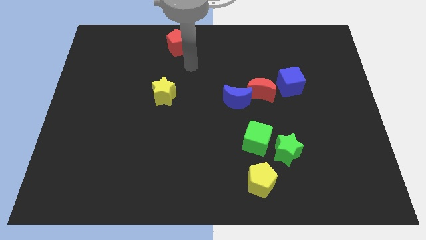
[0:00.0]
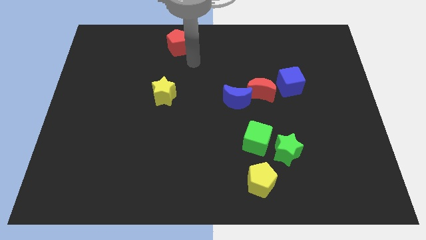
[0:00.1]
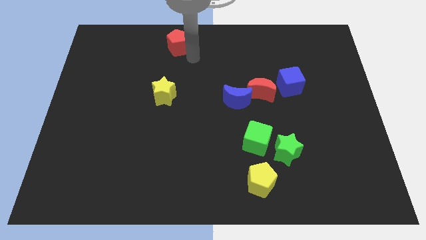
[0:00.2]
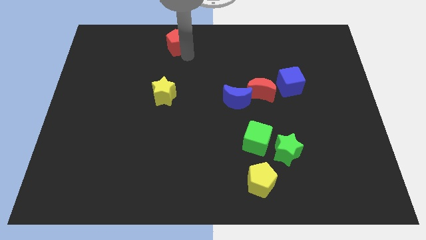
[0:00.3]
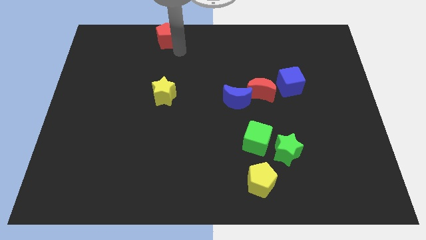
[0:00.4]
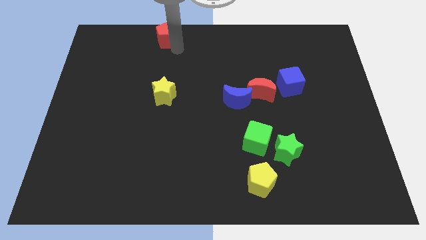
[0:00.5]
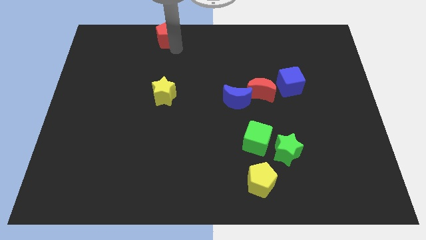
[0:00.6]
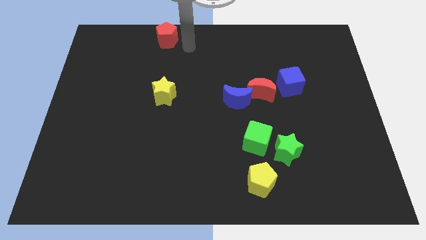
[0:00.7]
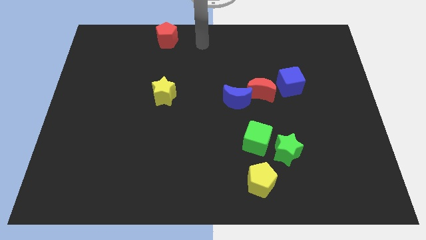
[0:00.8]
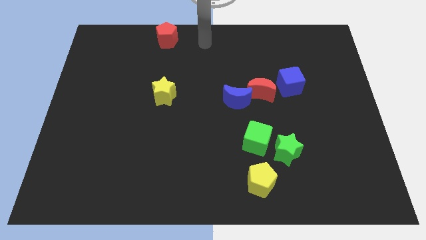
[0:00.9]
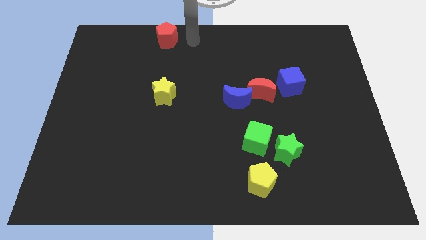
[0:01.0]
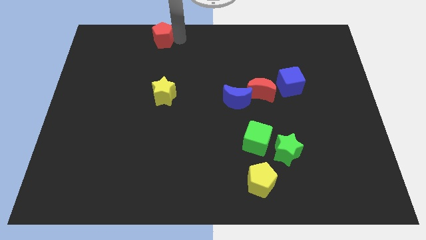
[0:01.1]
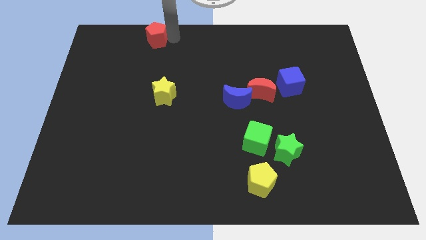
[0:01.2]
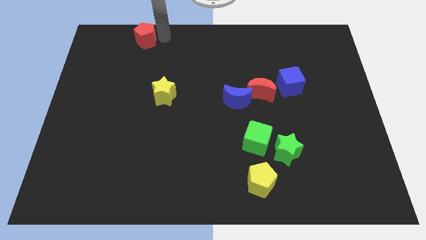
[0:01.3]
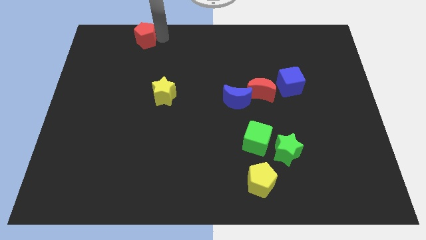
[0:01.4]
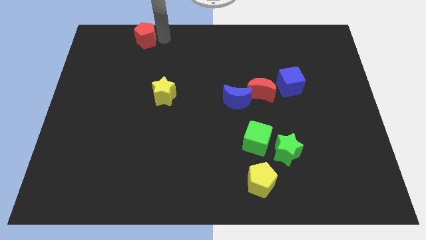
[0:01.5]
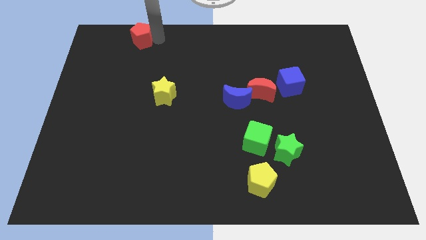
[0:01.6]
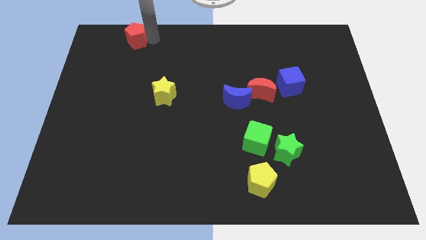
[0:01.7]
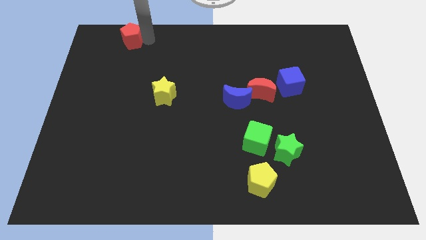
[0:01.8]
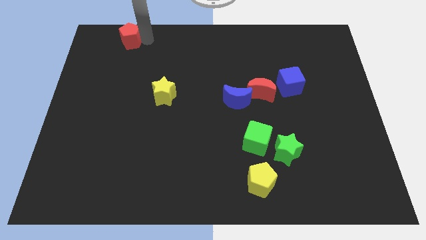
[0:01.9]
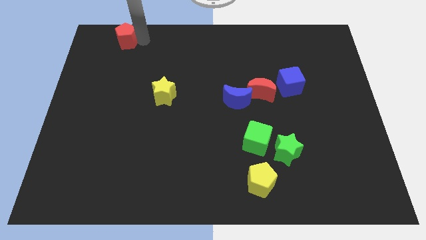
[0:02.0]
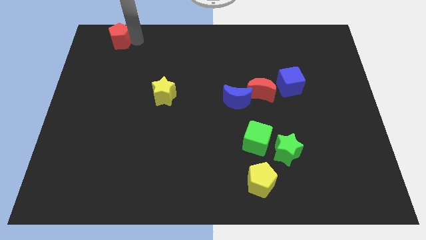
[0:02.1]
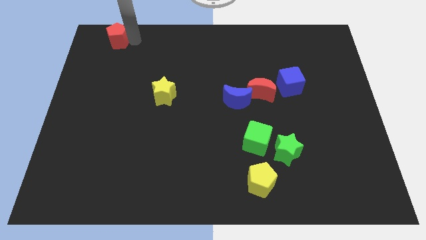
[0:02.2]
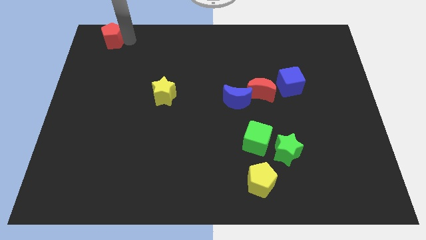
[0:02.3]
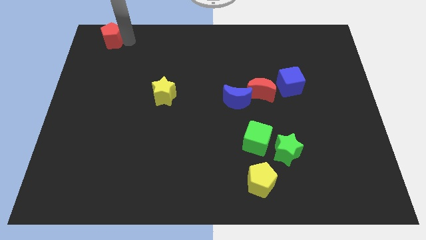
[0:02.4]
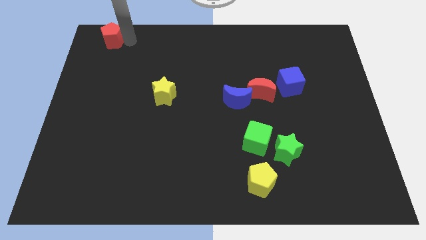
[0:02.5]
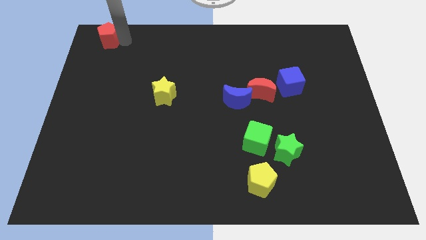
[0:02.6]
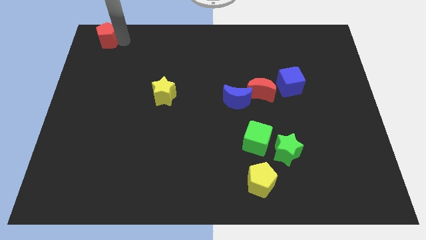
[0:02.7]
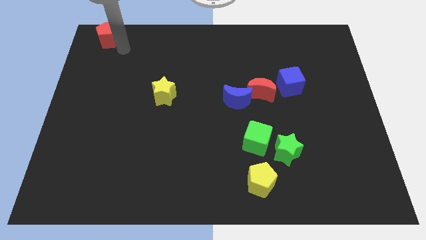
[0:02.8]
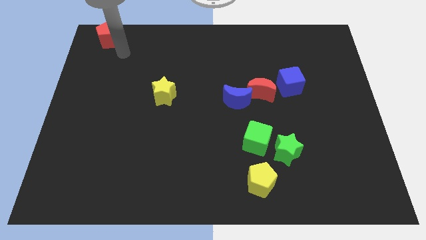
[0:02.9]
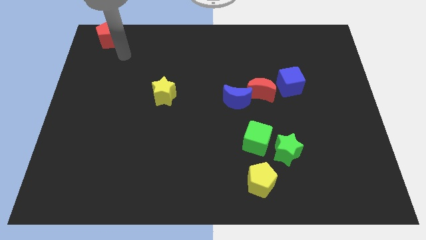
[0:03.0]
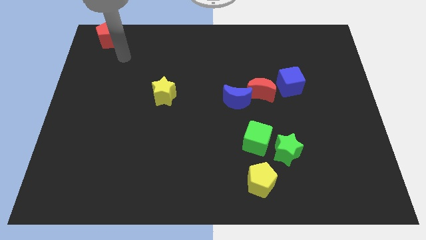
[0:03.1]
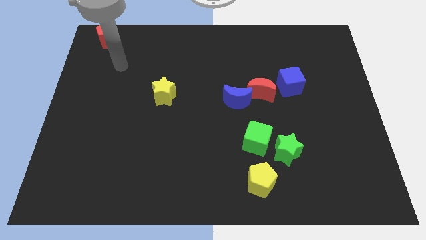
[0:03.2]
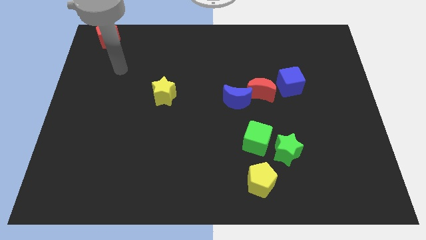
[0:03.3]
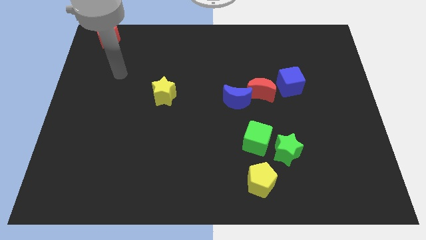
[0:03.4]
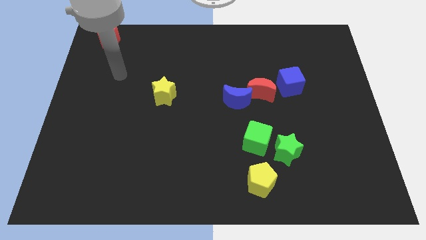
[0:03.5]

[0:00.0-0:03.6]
move red pentagon towards top left corner
